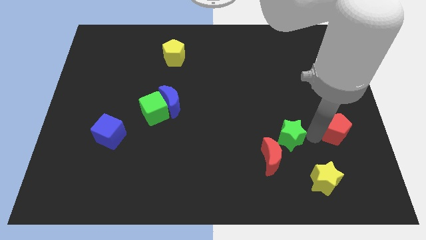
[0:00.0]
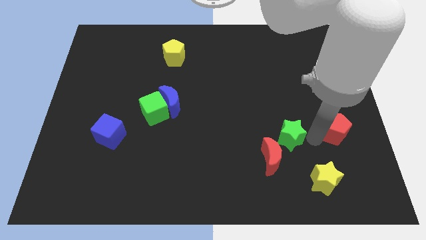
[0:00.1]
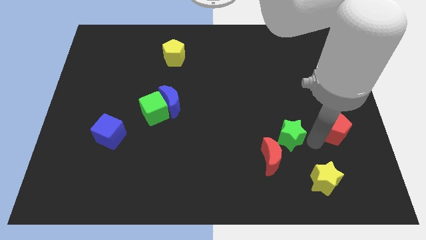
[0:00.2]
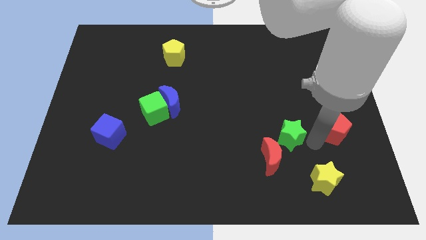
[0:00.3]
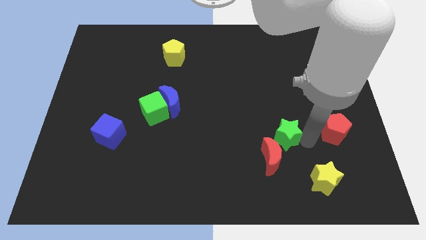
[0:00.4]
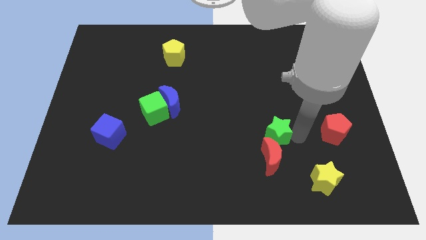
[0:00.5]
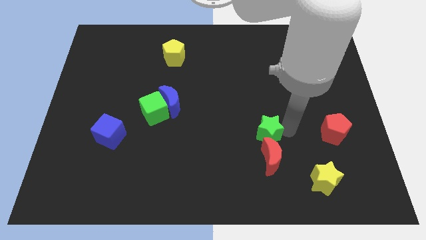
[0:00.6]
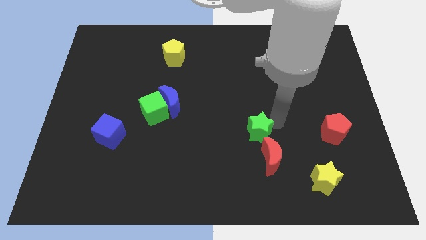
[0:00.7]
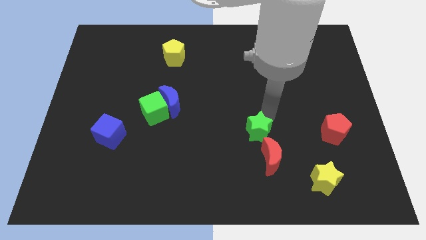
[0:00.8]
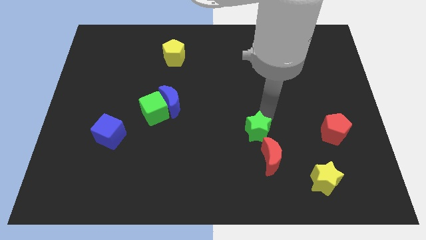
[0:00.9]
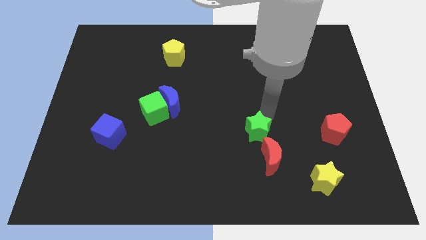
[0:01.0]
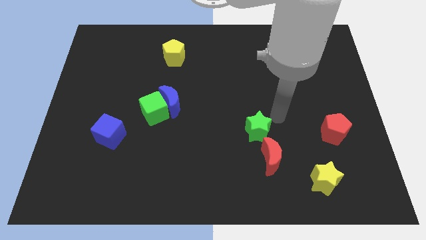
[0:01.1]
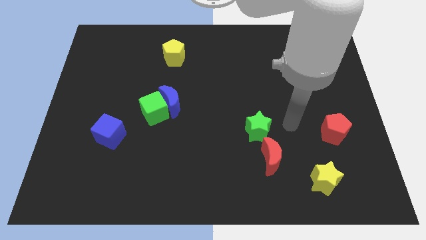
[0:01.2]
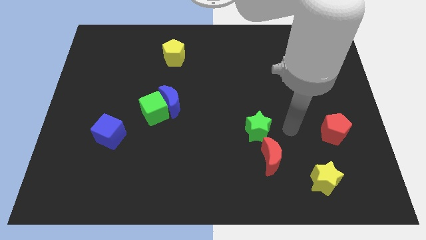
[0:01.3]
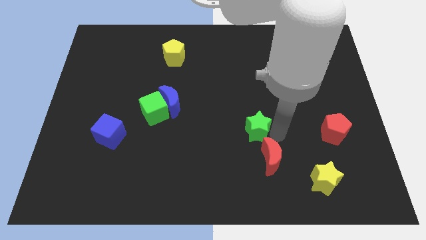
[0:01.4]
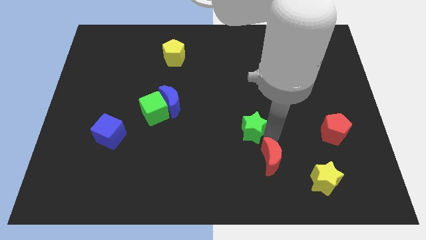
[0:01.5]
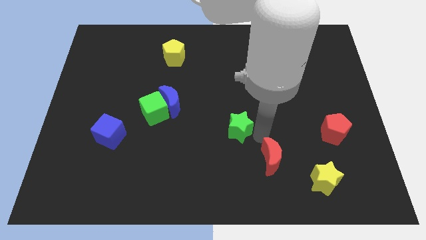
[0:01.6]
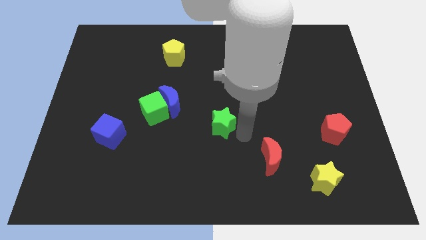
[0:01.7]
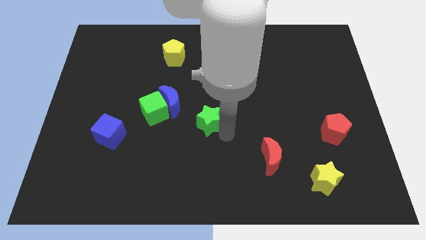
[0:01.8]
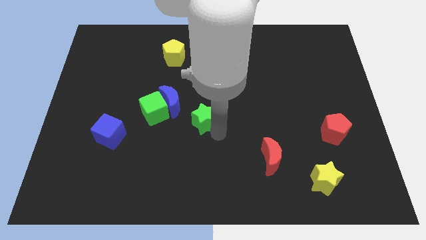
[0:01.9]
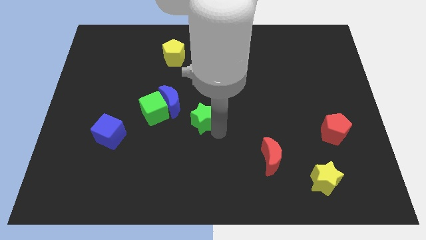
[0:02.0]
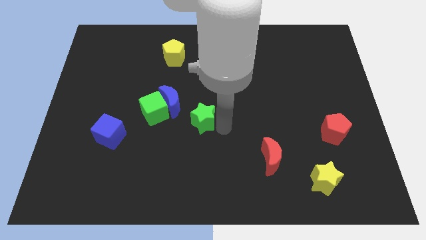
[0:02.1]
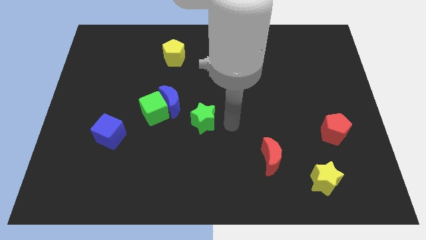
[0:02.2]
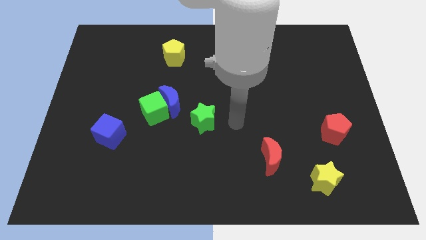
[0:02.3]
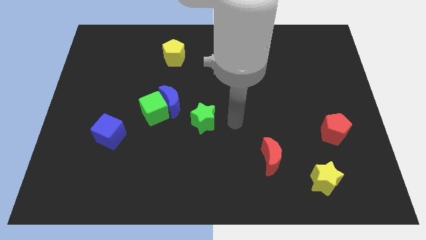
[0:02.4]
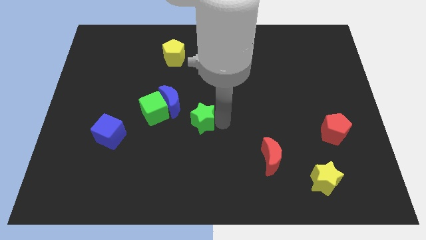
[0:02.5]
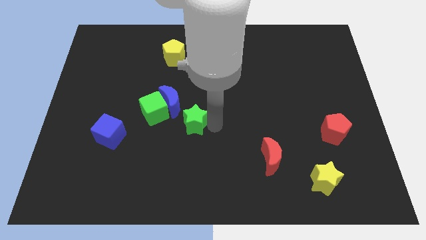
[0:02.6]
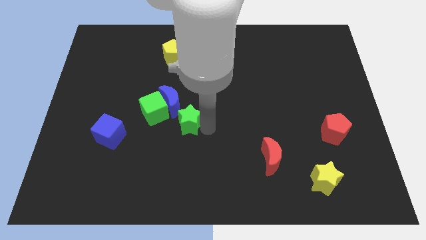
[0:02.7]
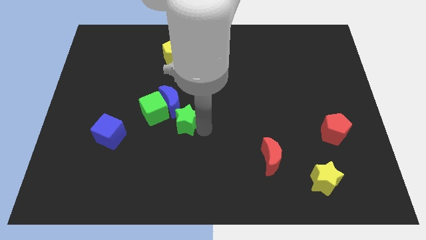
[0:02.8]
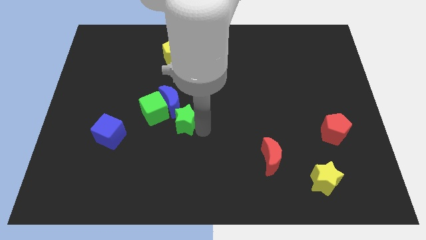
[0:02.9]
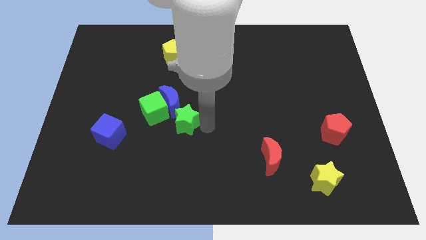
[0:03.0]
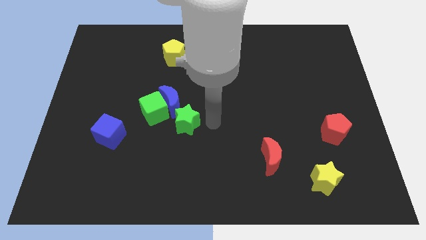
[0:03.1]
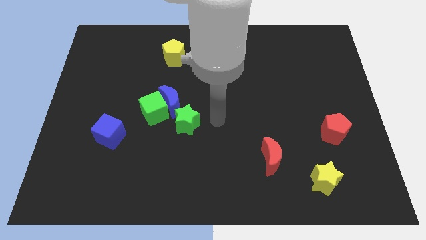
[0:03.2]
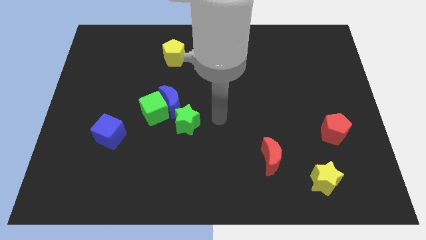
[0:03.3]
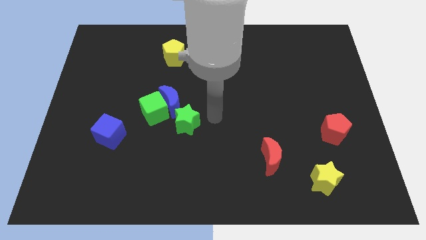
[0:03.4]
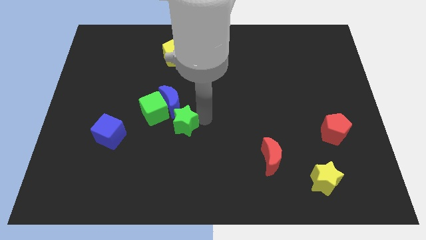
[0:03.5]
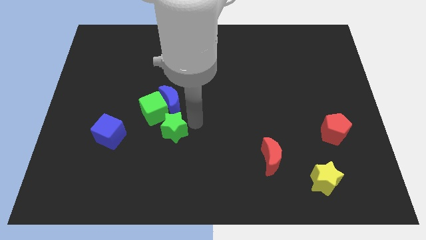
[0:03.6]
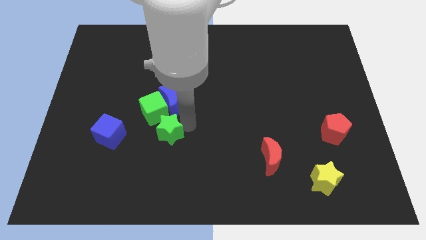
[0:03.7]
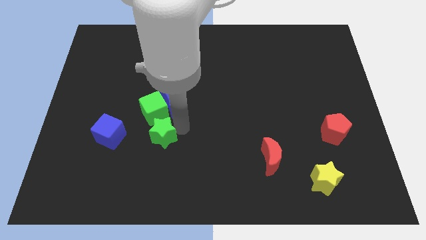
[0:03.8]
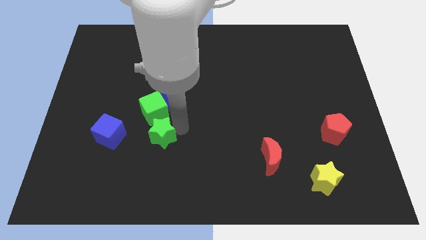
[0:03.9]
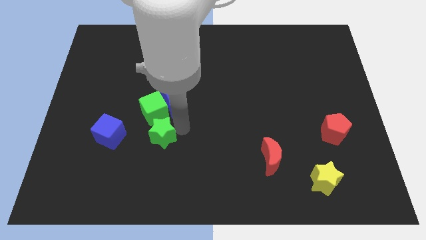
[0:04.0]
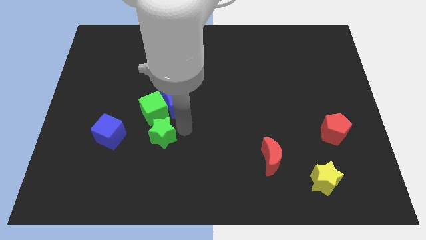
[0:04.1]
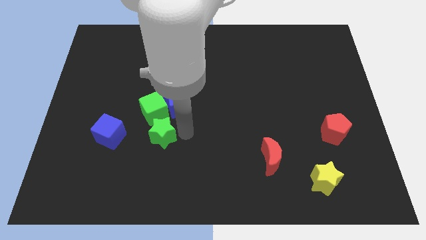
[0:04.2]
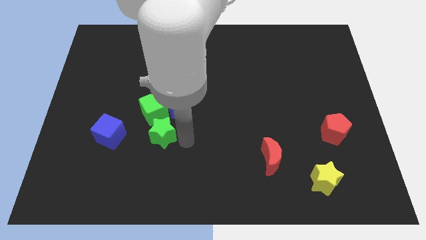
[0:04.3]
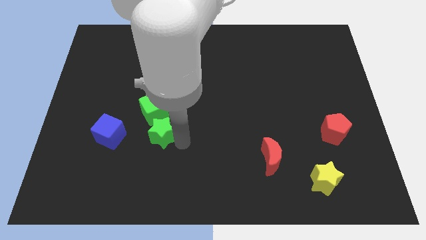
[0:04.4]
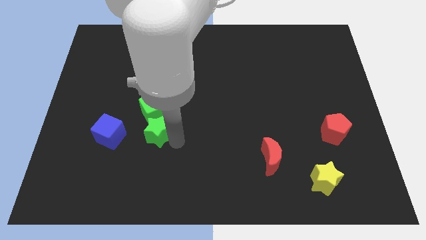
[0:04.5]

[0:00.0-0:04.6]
place the green star below the green cube

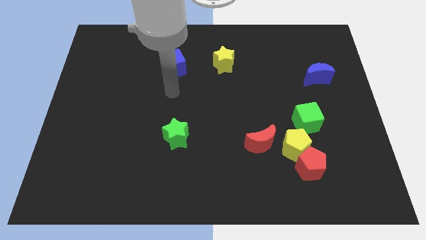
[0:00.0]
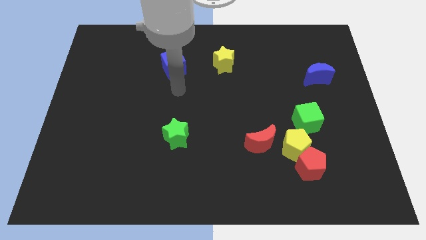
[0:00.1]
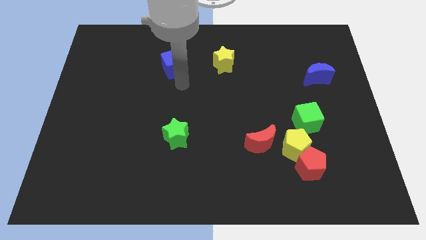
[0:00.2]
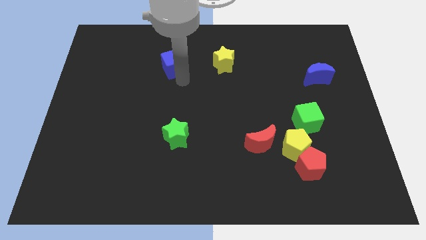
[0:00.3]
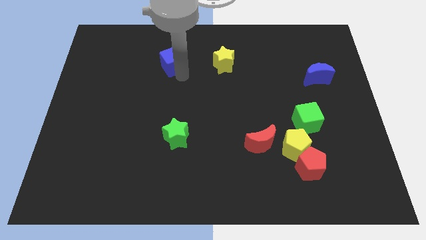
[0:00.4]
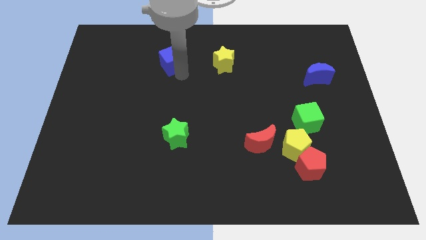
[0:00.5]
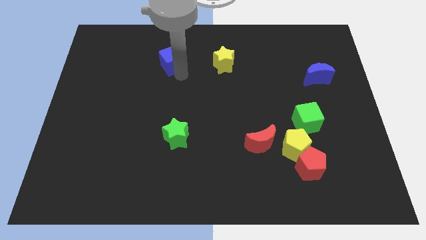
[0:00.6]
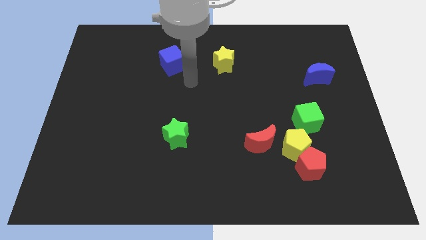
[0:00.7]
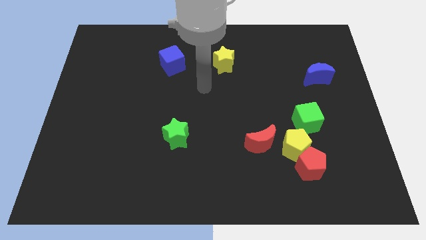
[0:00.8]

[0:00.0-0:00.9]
slightly move the blue cube to the top

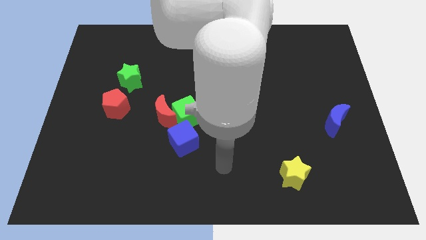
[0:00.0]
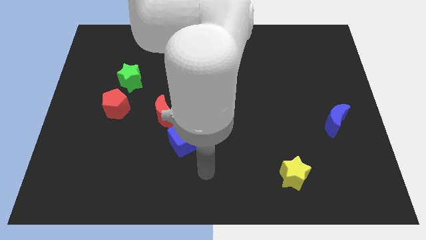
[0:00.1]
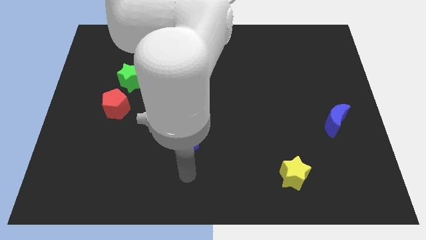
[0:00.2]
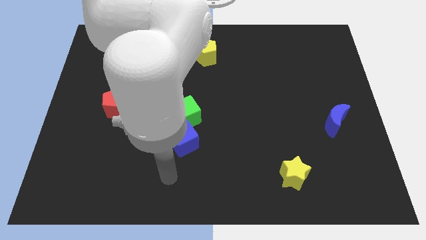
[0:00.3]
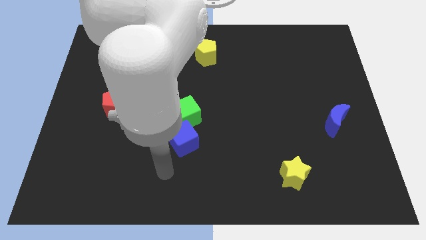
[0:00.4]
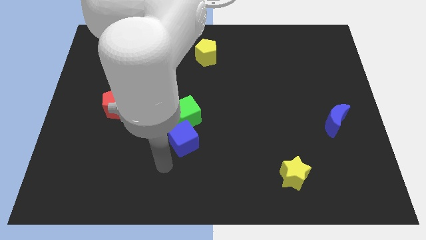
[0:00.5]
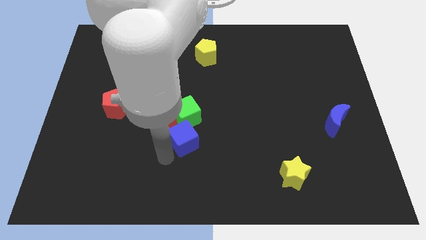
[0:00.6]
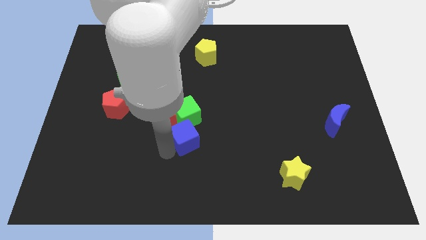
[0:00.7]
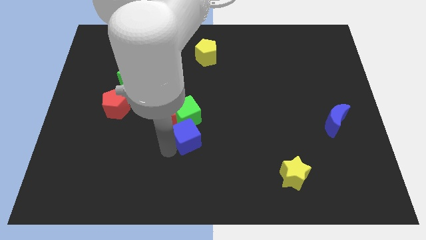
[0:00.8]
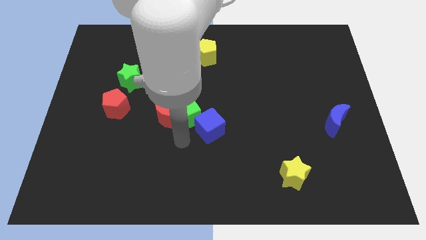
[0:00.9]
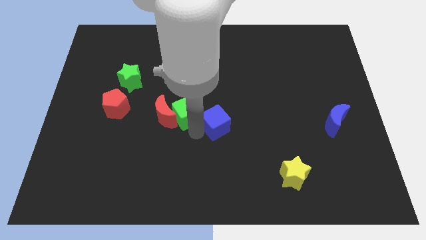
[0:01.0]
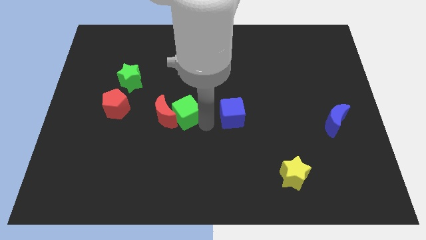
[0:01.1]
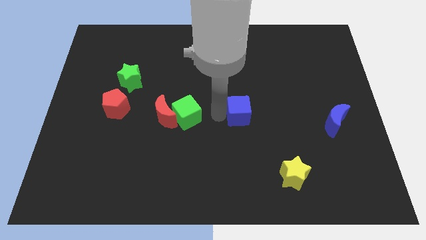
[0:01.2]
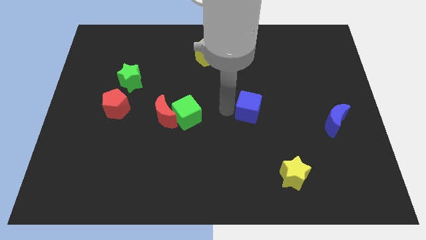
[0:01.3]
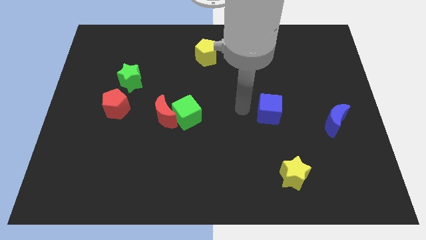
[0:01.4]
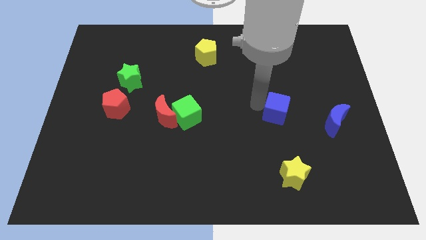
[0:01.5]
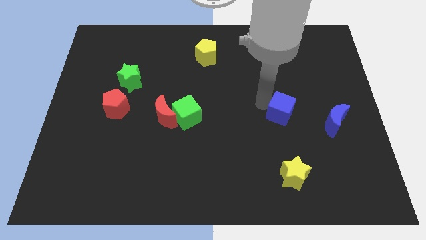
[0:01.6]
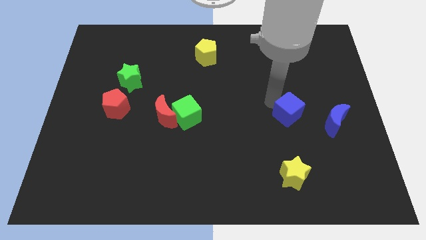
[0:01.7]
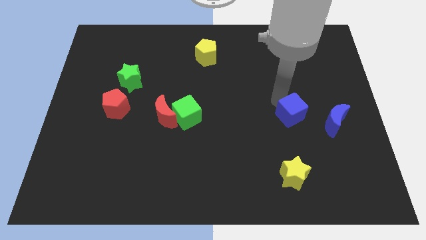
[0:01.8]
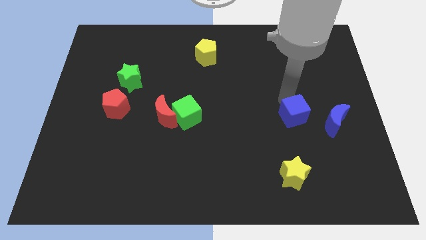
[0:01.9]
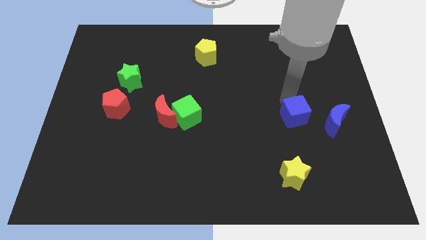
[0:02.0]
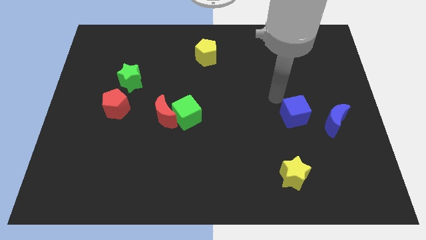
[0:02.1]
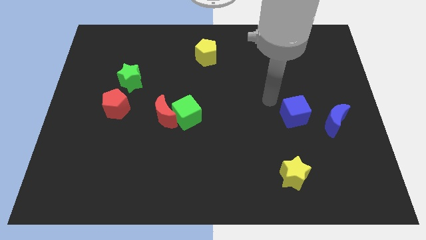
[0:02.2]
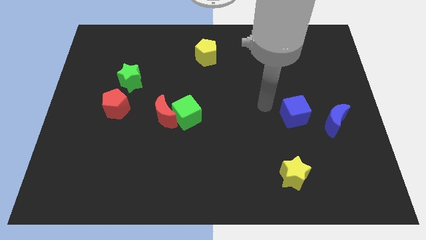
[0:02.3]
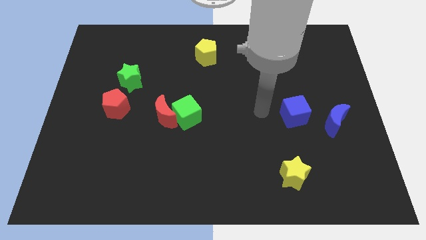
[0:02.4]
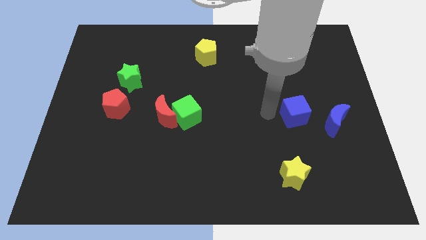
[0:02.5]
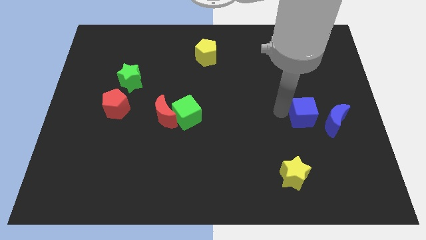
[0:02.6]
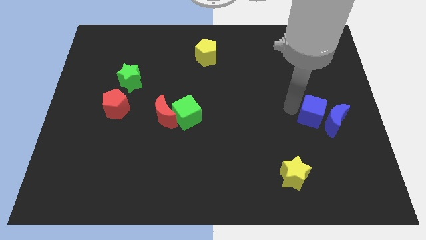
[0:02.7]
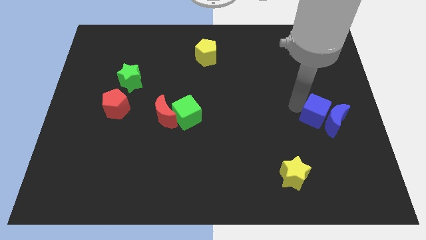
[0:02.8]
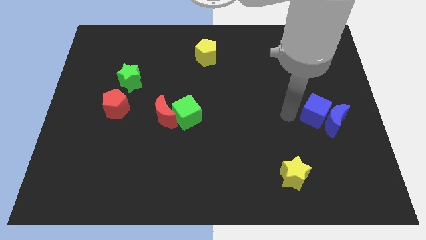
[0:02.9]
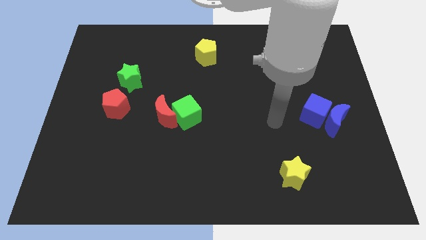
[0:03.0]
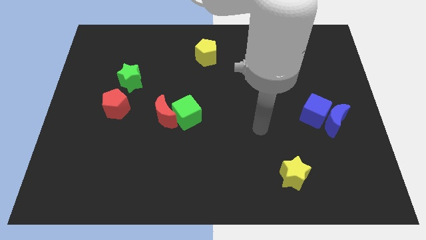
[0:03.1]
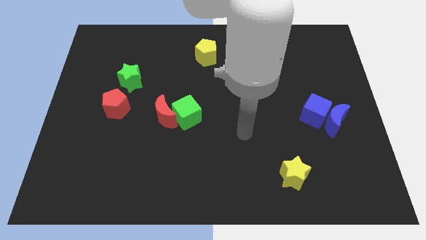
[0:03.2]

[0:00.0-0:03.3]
place the blue cube into blue moon diagonal left

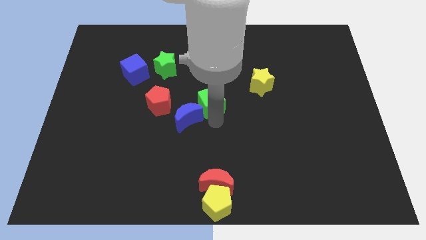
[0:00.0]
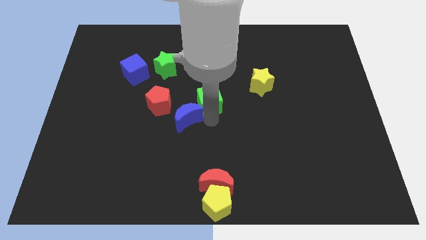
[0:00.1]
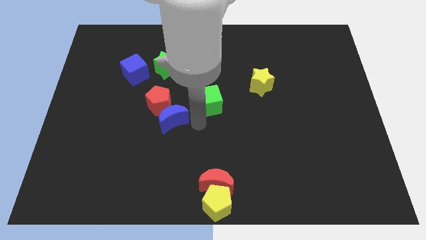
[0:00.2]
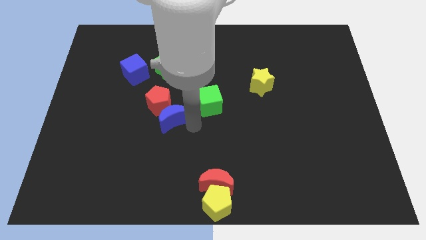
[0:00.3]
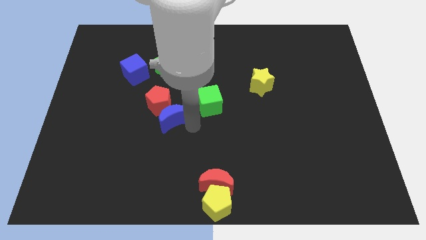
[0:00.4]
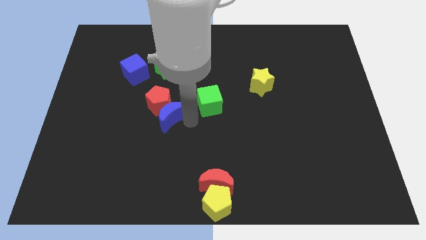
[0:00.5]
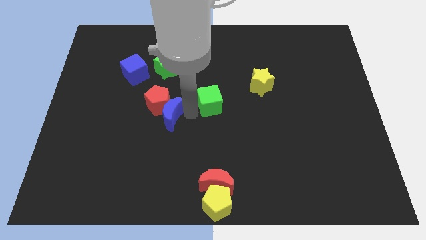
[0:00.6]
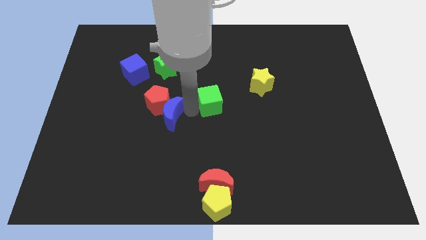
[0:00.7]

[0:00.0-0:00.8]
make the blue crescent to touch the red pentagon
